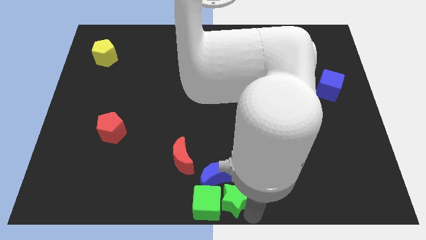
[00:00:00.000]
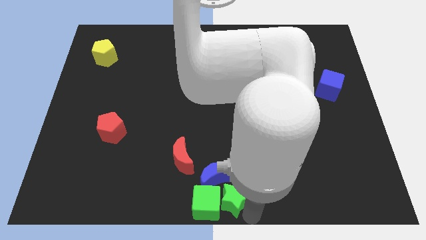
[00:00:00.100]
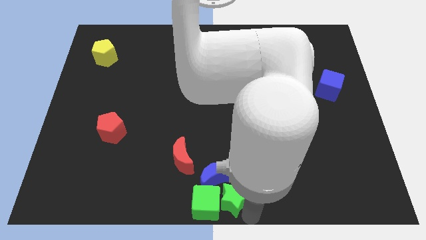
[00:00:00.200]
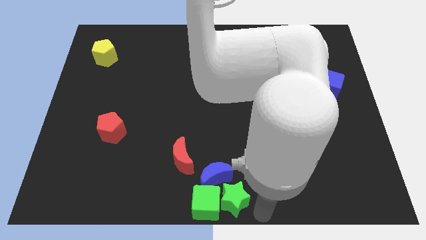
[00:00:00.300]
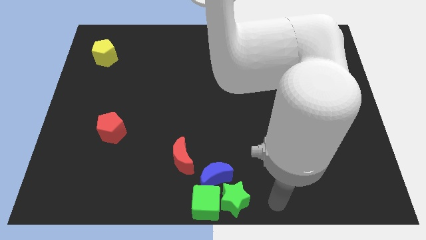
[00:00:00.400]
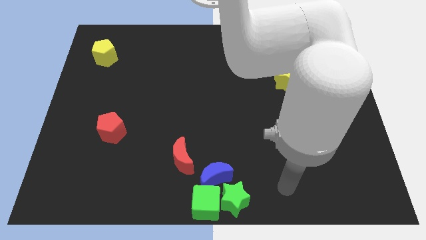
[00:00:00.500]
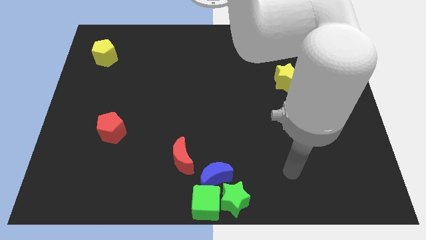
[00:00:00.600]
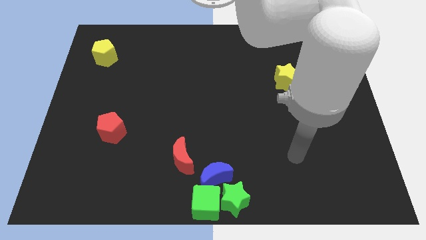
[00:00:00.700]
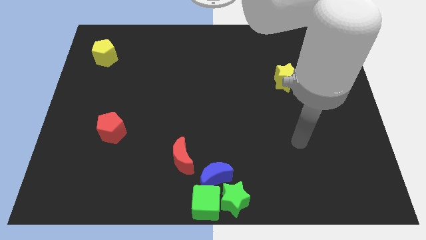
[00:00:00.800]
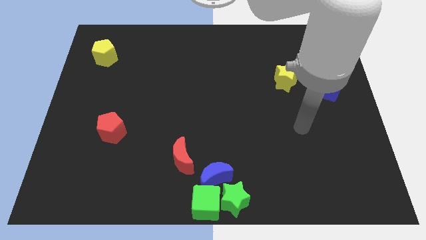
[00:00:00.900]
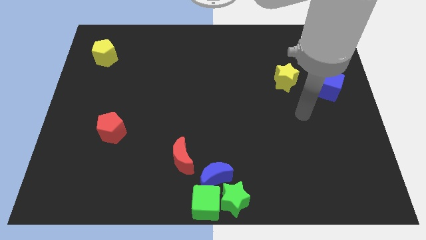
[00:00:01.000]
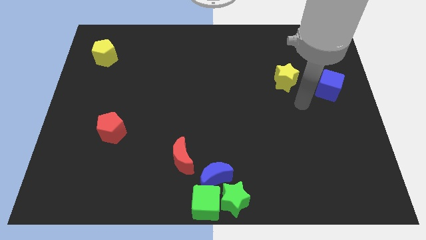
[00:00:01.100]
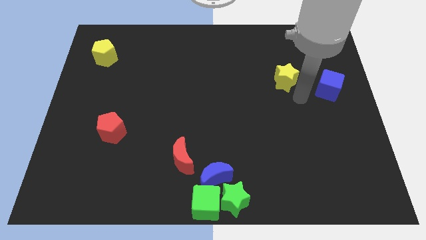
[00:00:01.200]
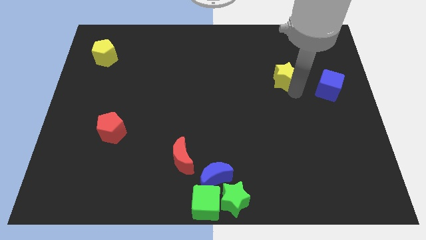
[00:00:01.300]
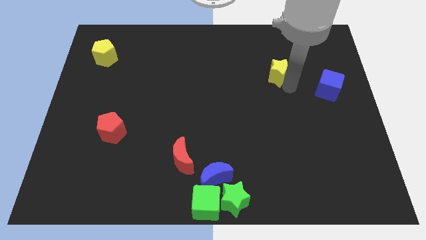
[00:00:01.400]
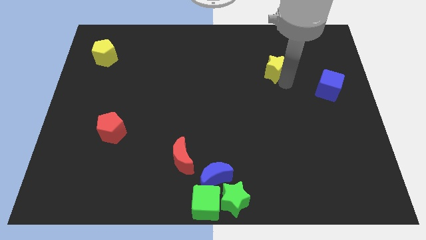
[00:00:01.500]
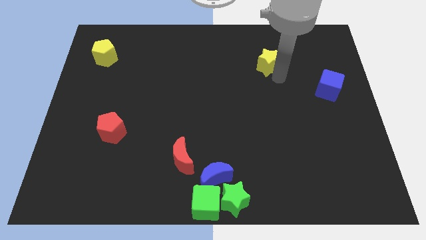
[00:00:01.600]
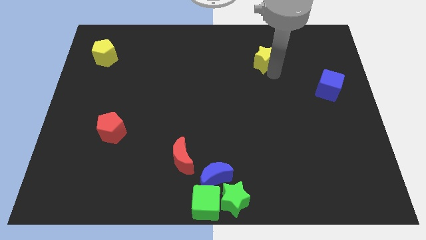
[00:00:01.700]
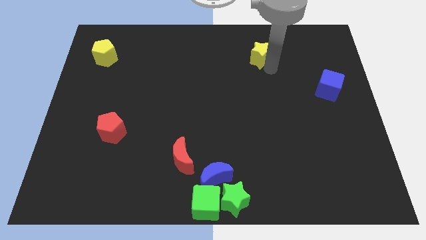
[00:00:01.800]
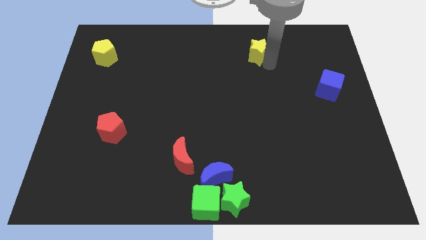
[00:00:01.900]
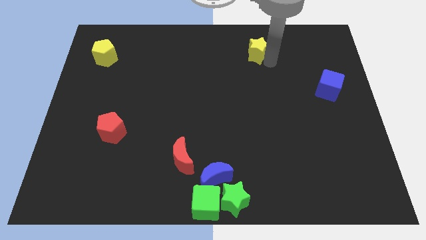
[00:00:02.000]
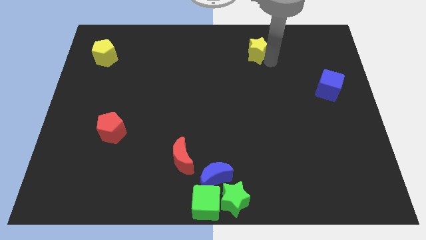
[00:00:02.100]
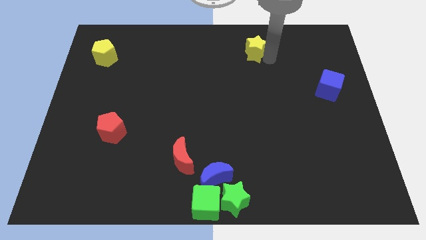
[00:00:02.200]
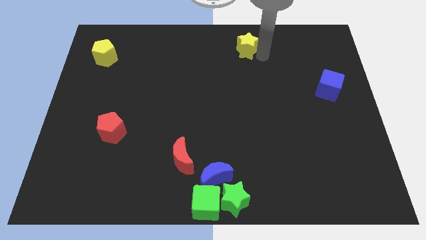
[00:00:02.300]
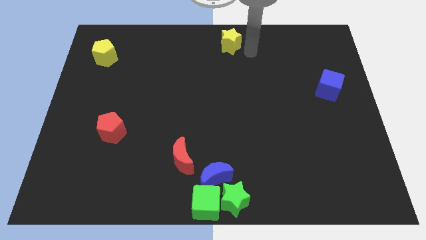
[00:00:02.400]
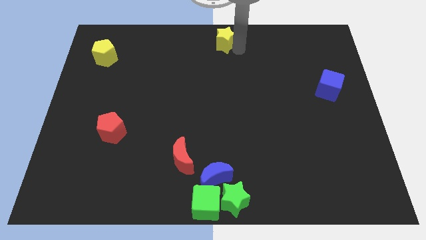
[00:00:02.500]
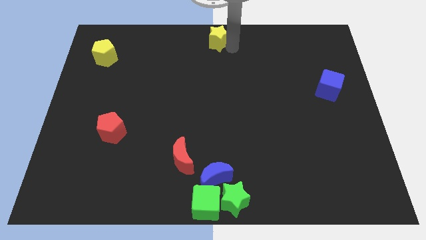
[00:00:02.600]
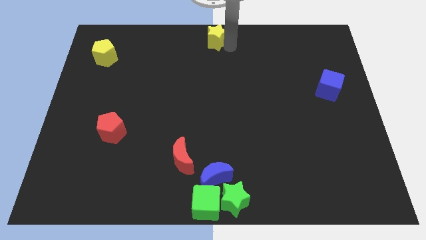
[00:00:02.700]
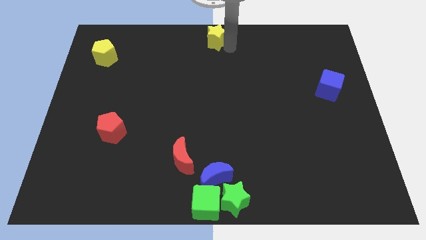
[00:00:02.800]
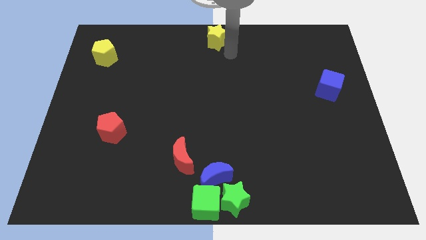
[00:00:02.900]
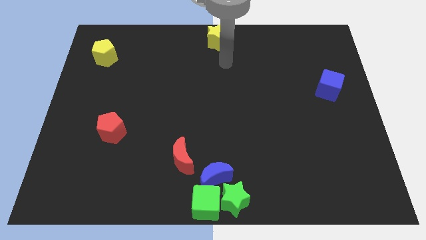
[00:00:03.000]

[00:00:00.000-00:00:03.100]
place the yellow star above the blue cube

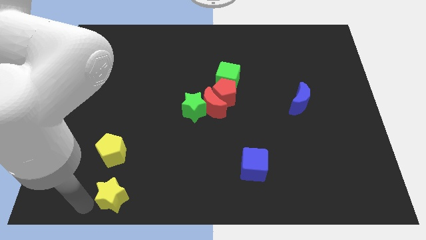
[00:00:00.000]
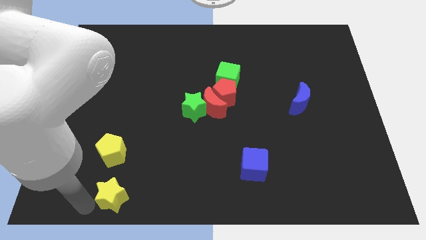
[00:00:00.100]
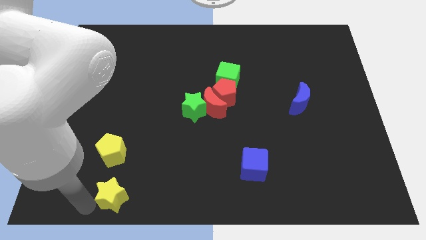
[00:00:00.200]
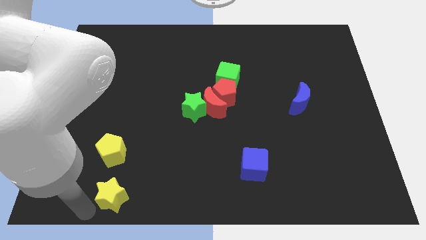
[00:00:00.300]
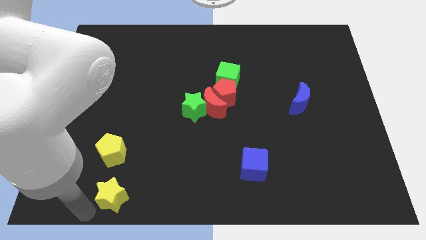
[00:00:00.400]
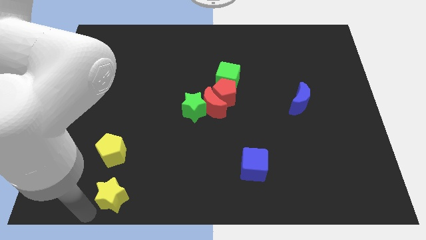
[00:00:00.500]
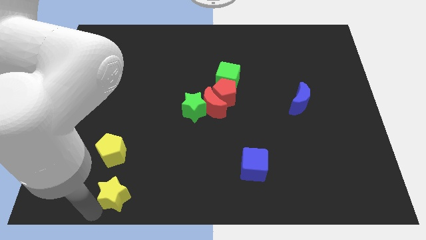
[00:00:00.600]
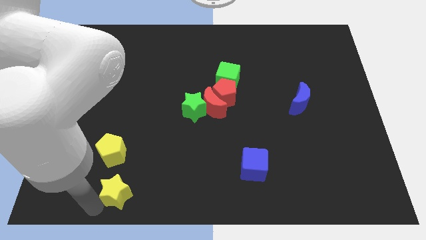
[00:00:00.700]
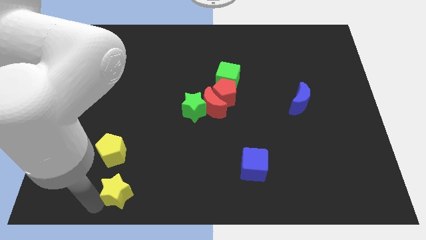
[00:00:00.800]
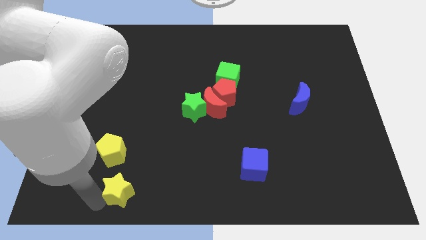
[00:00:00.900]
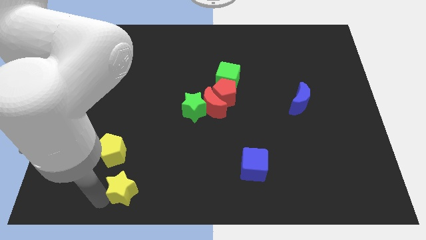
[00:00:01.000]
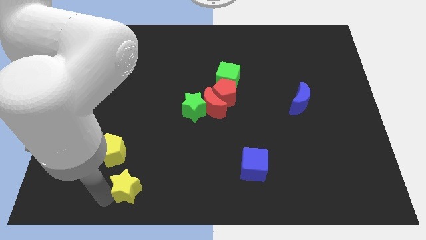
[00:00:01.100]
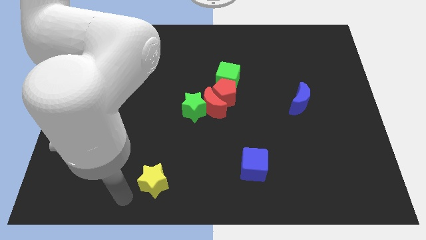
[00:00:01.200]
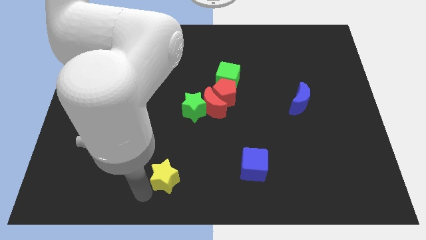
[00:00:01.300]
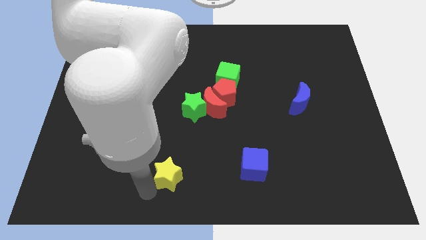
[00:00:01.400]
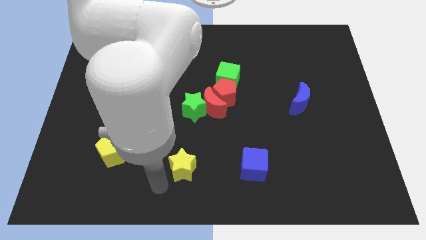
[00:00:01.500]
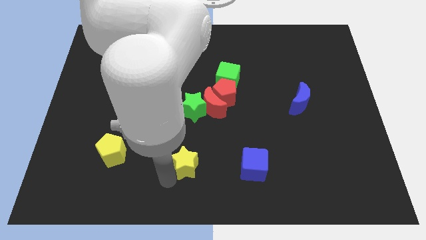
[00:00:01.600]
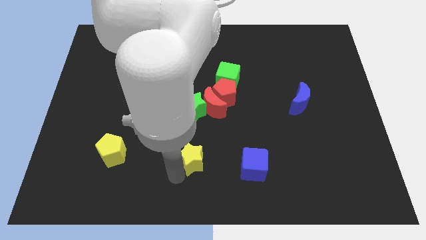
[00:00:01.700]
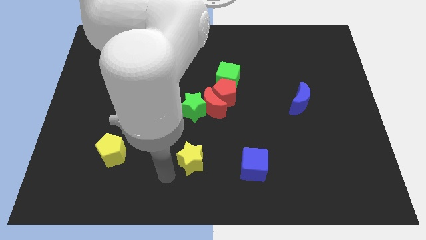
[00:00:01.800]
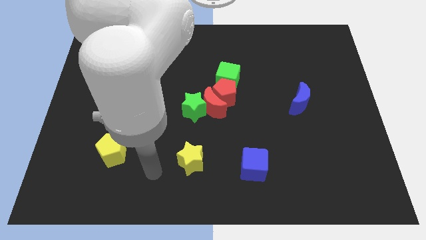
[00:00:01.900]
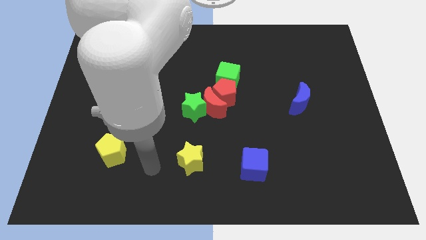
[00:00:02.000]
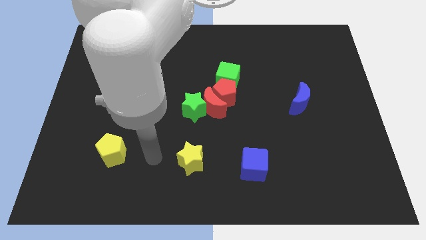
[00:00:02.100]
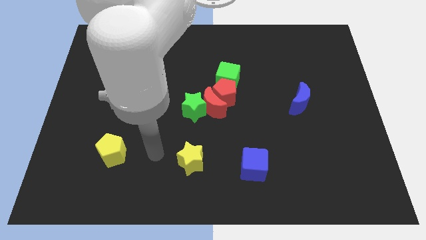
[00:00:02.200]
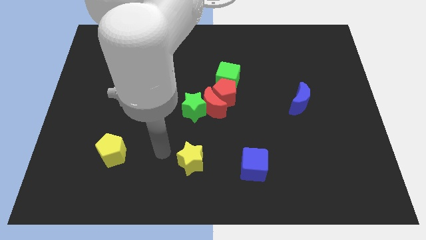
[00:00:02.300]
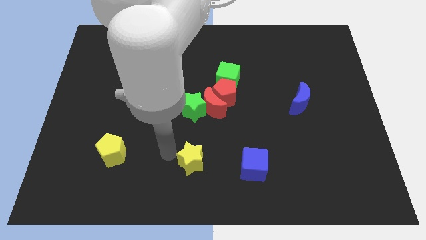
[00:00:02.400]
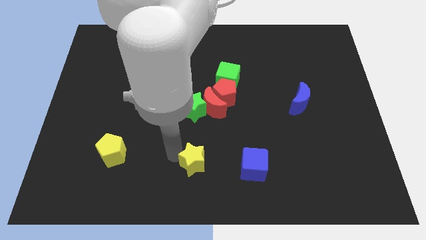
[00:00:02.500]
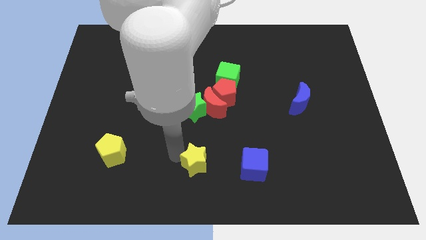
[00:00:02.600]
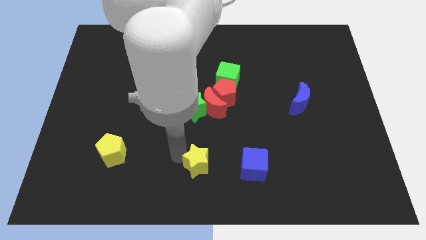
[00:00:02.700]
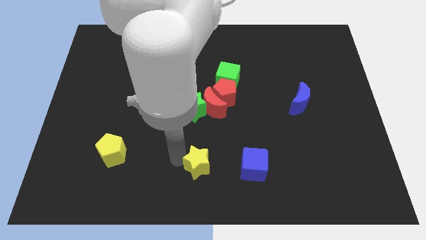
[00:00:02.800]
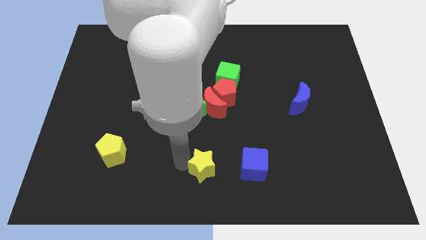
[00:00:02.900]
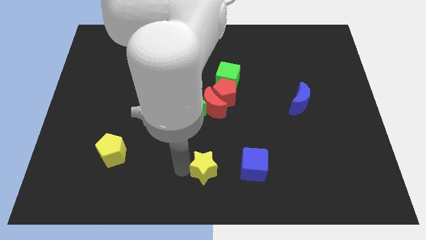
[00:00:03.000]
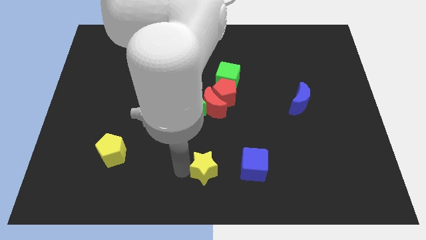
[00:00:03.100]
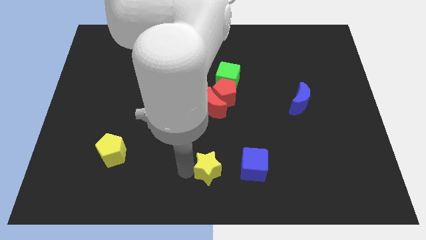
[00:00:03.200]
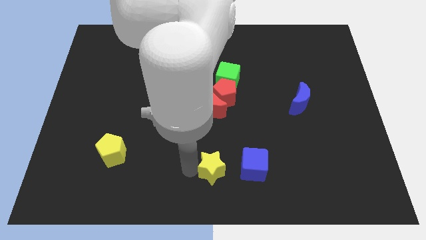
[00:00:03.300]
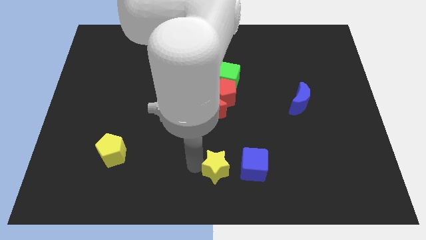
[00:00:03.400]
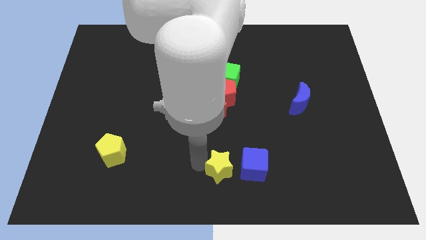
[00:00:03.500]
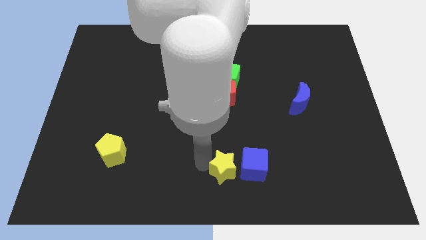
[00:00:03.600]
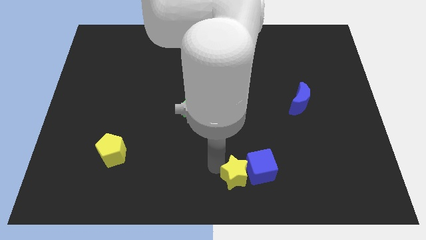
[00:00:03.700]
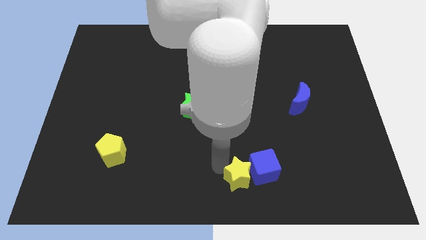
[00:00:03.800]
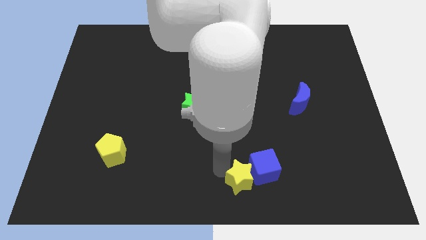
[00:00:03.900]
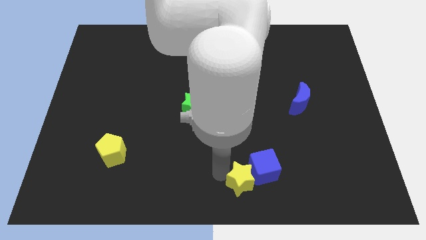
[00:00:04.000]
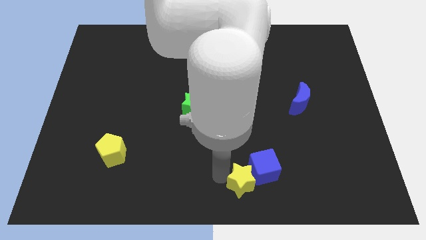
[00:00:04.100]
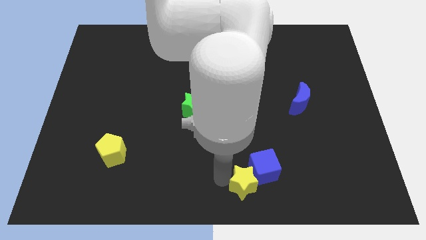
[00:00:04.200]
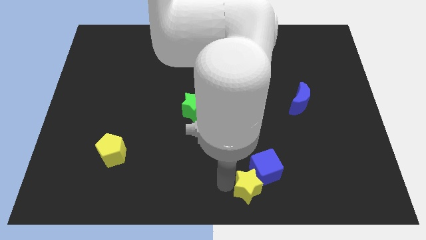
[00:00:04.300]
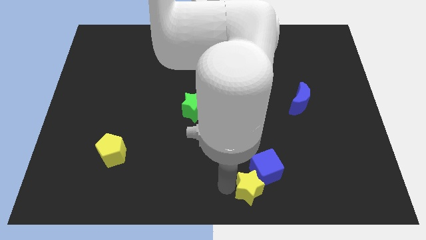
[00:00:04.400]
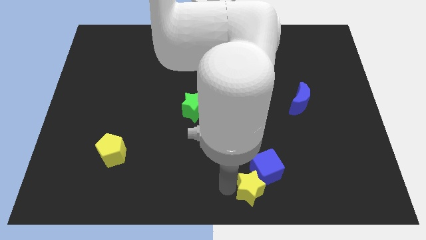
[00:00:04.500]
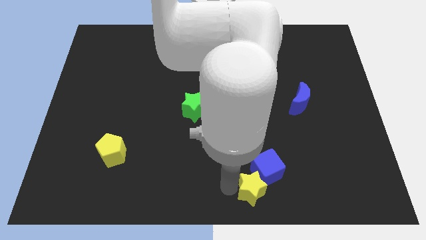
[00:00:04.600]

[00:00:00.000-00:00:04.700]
move the yellow star into the blue cube

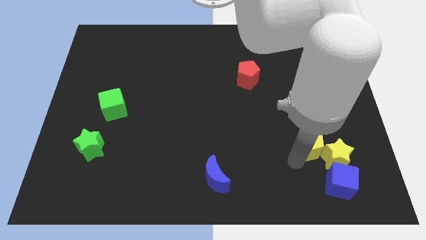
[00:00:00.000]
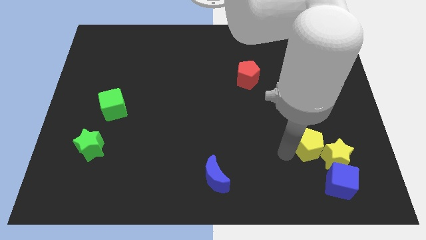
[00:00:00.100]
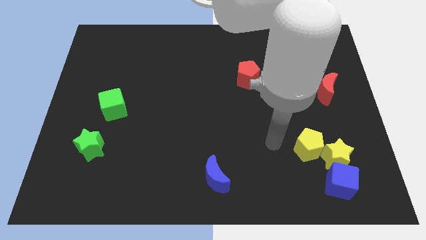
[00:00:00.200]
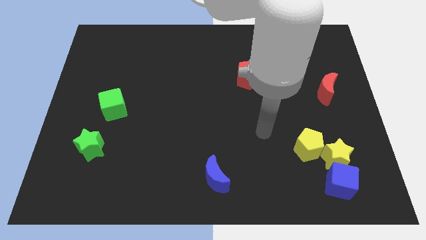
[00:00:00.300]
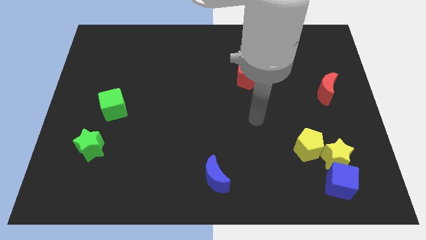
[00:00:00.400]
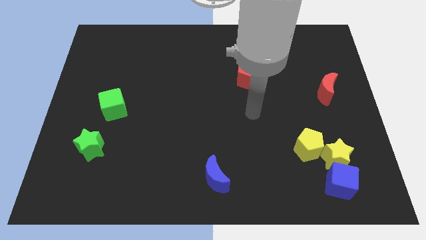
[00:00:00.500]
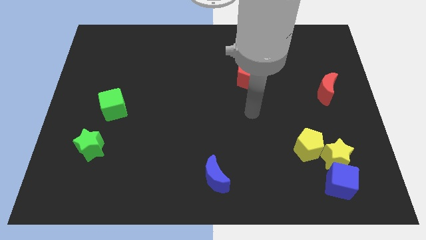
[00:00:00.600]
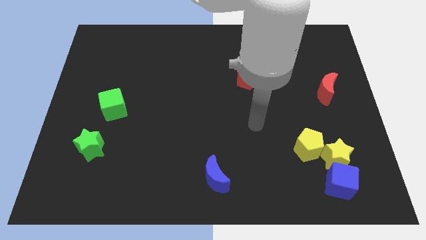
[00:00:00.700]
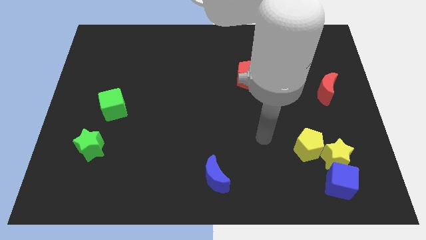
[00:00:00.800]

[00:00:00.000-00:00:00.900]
move the arm away from the yellow pentagon

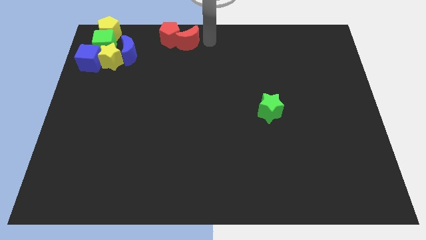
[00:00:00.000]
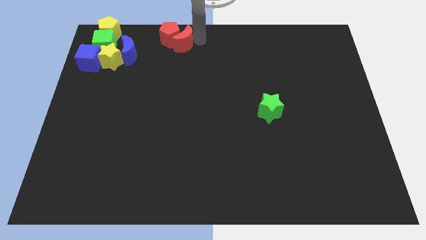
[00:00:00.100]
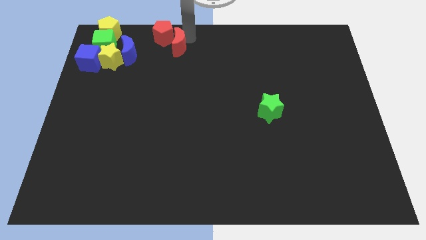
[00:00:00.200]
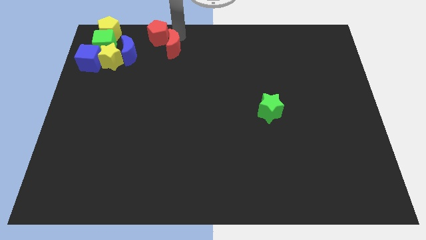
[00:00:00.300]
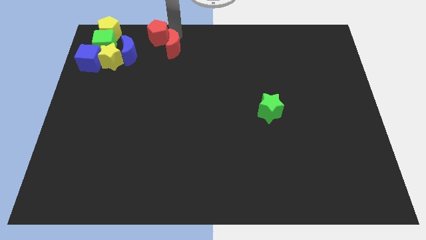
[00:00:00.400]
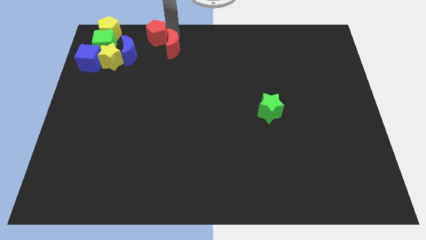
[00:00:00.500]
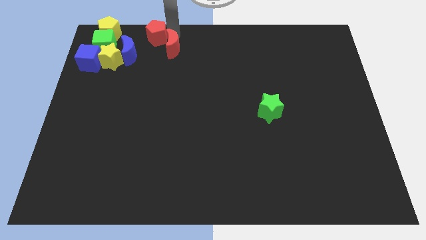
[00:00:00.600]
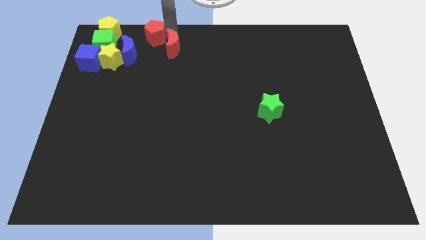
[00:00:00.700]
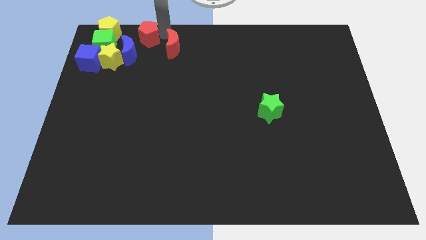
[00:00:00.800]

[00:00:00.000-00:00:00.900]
push red pentagon towards the group of blocks
